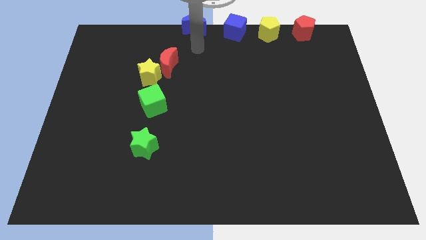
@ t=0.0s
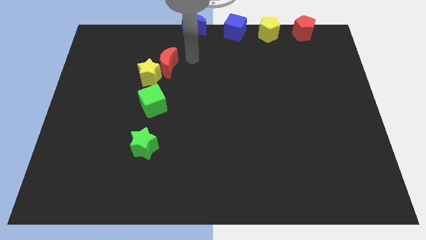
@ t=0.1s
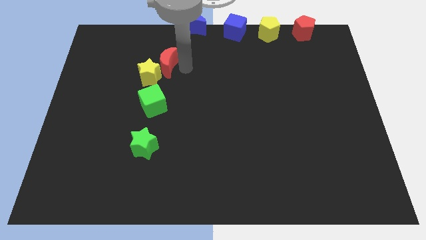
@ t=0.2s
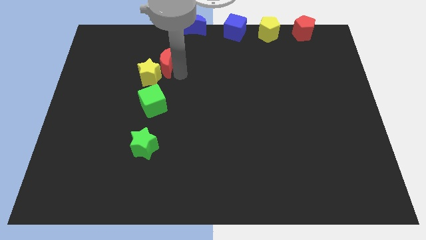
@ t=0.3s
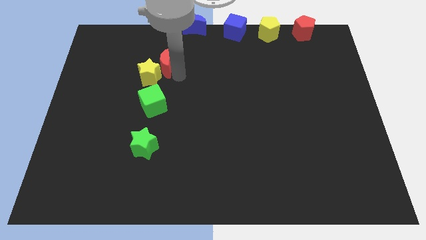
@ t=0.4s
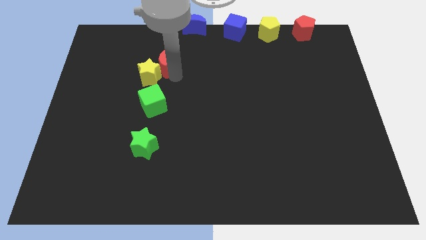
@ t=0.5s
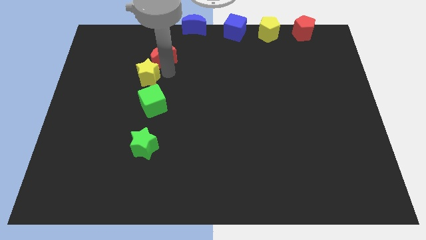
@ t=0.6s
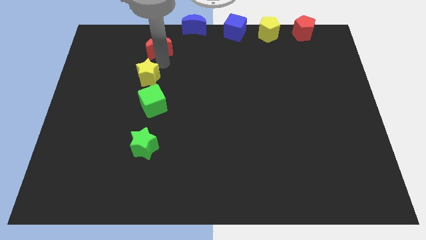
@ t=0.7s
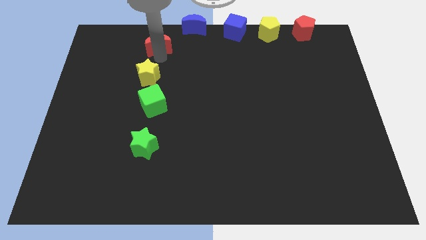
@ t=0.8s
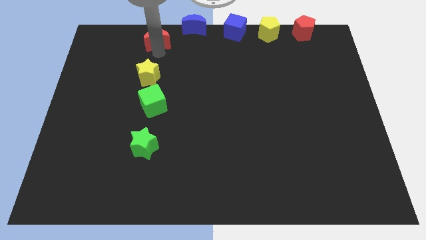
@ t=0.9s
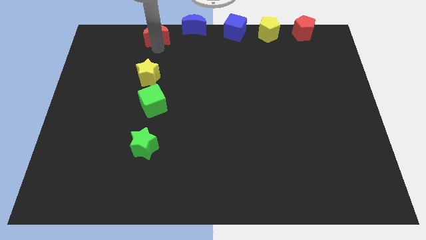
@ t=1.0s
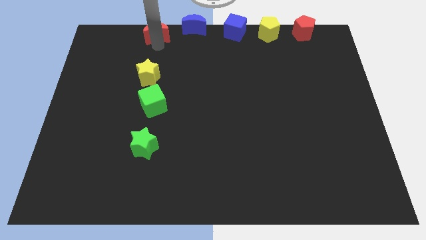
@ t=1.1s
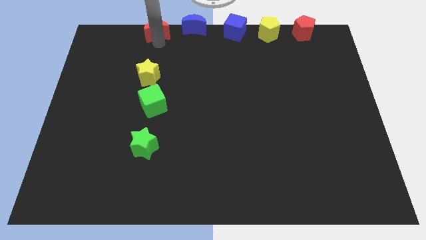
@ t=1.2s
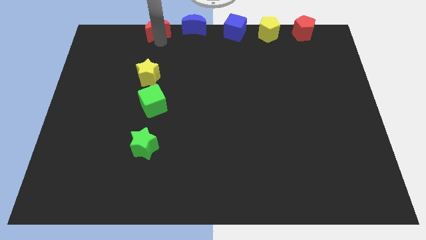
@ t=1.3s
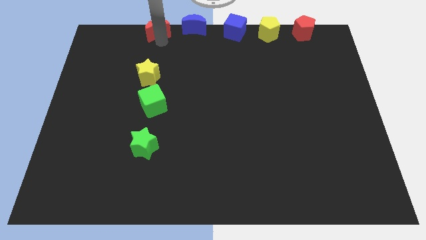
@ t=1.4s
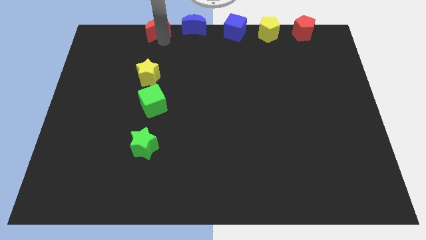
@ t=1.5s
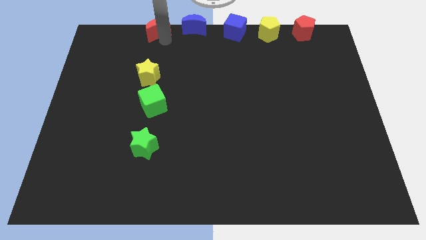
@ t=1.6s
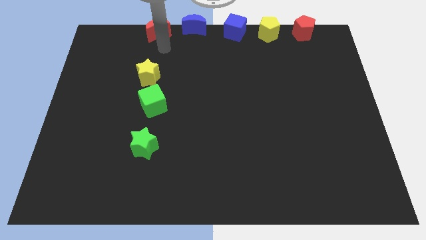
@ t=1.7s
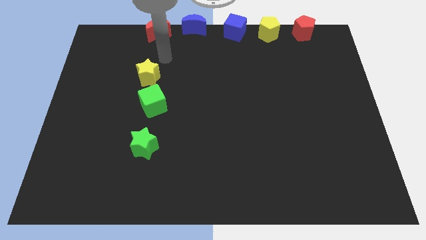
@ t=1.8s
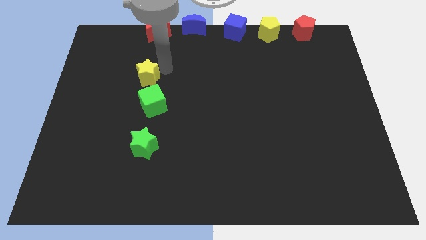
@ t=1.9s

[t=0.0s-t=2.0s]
move the red crescent to the left side of the blue crescent

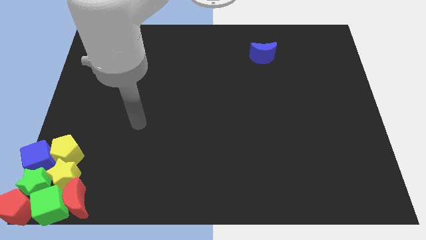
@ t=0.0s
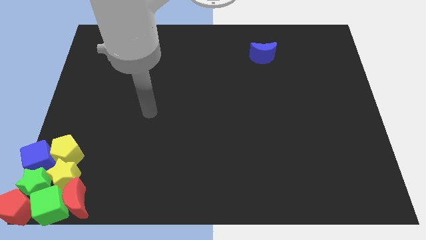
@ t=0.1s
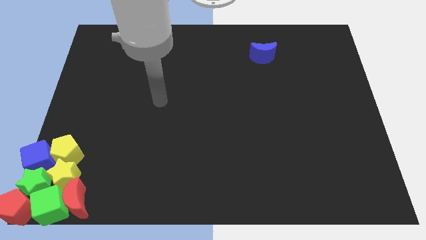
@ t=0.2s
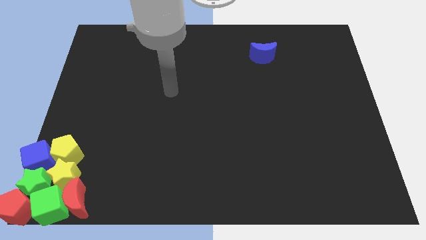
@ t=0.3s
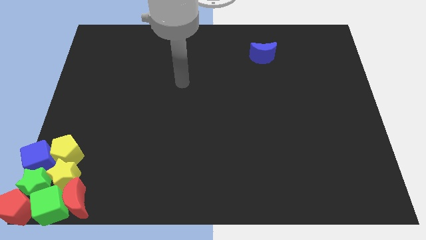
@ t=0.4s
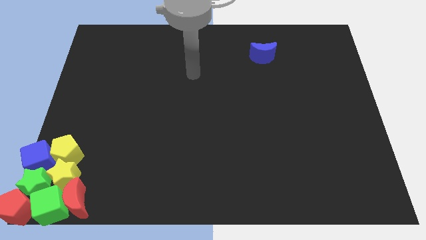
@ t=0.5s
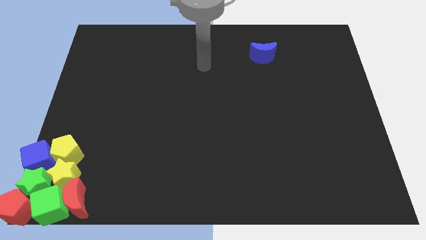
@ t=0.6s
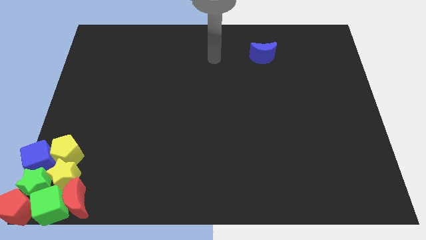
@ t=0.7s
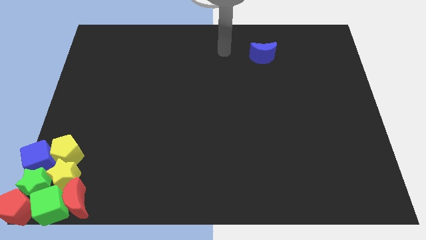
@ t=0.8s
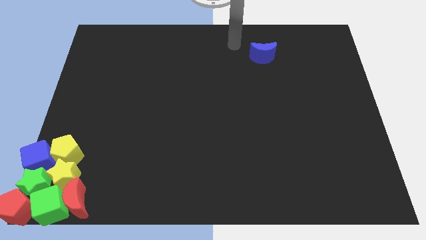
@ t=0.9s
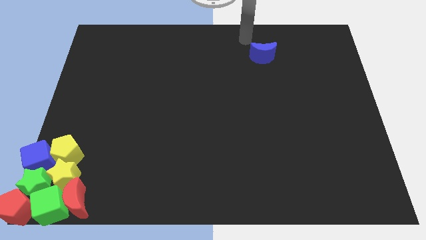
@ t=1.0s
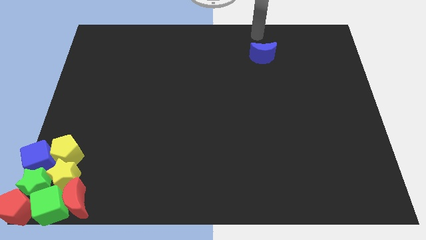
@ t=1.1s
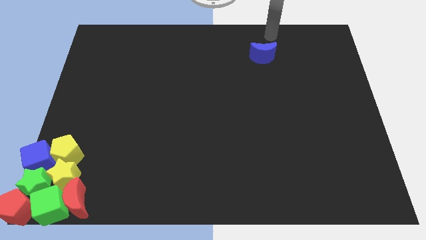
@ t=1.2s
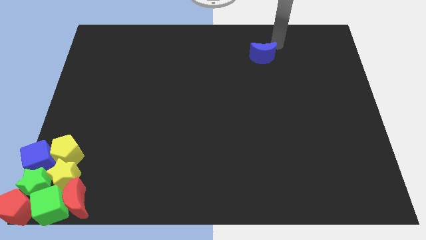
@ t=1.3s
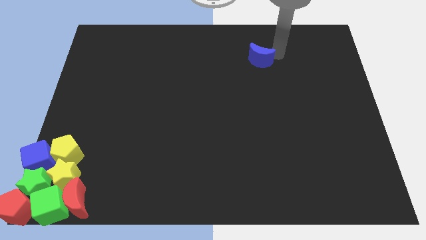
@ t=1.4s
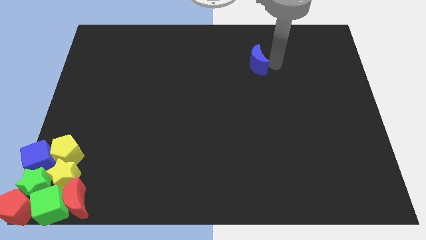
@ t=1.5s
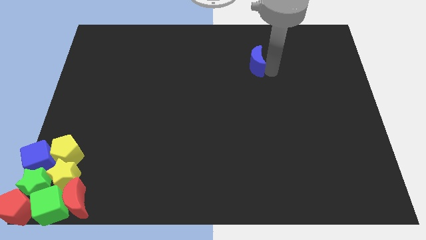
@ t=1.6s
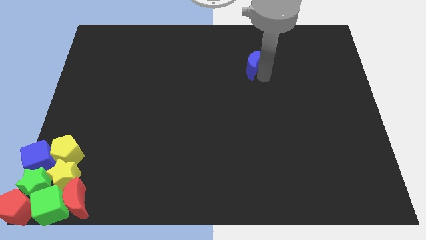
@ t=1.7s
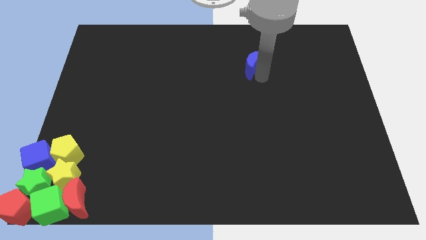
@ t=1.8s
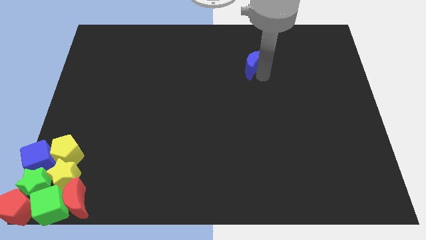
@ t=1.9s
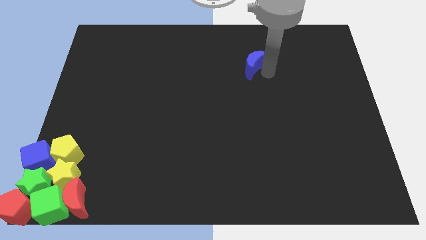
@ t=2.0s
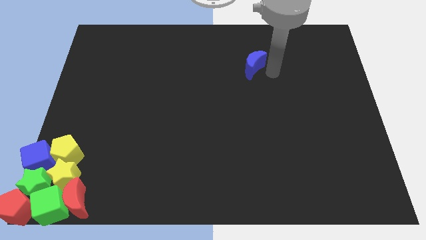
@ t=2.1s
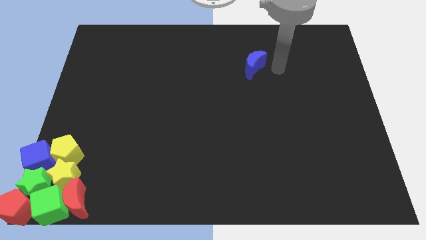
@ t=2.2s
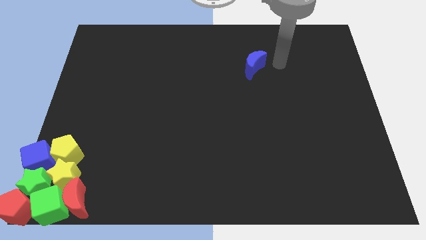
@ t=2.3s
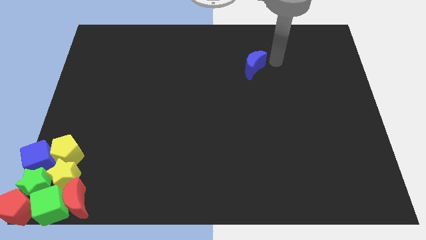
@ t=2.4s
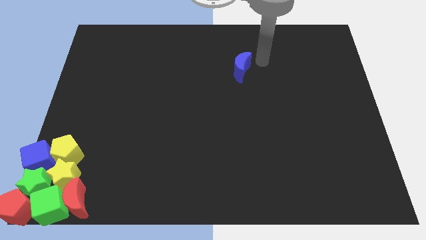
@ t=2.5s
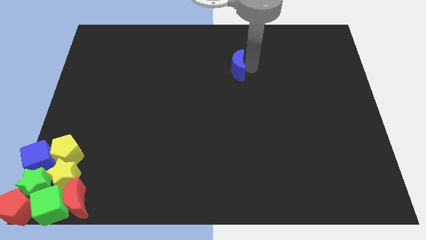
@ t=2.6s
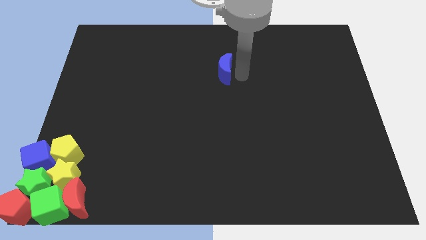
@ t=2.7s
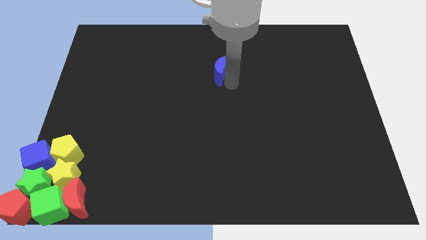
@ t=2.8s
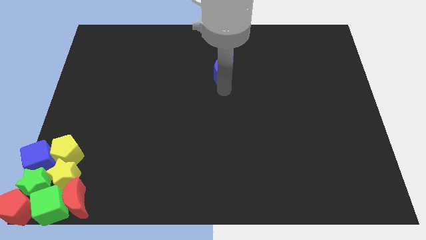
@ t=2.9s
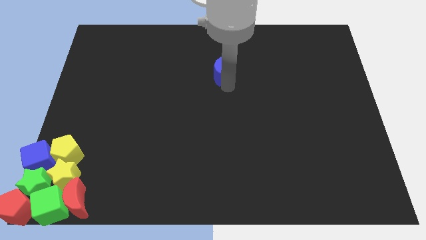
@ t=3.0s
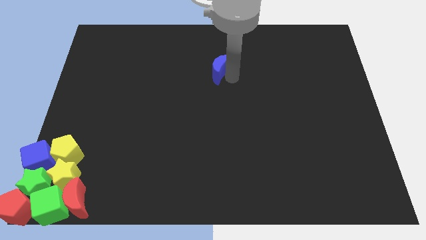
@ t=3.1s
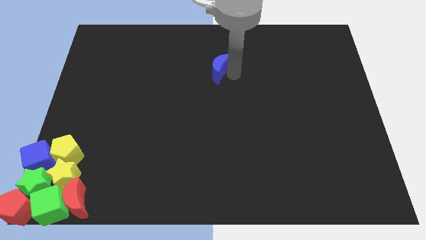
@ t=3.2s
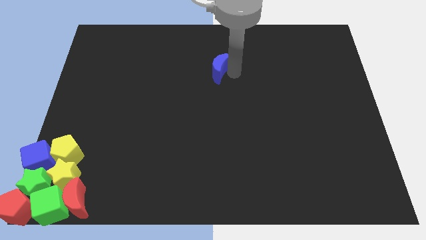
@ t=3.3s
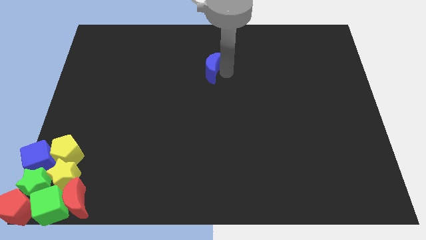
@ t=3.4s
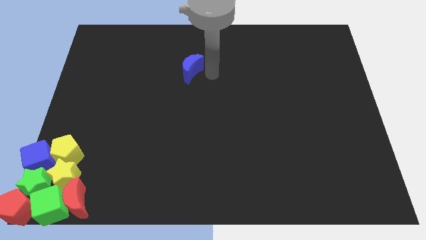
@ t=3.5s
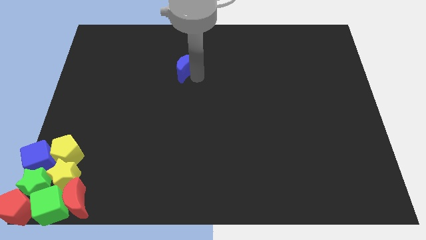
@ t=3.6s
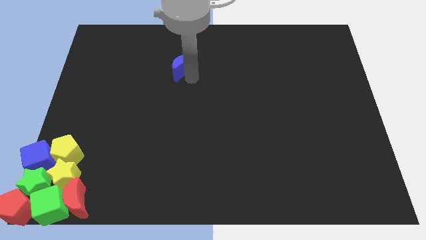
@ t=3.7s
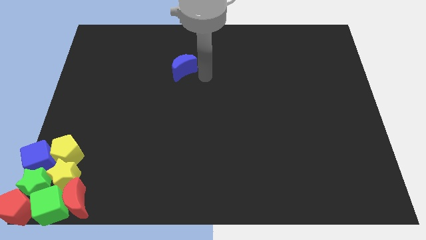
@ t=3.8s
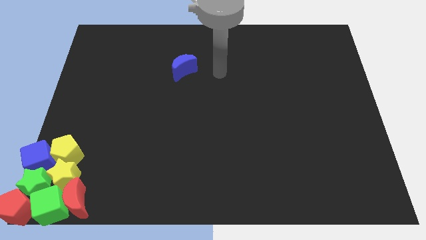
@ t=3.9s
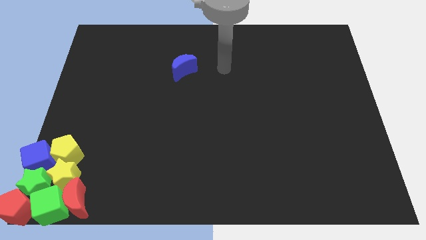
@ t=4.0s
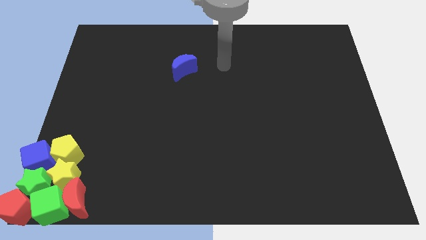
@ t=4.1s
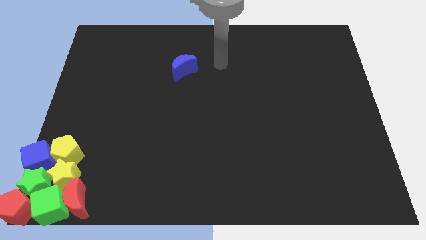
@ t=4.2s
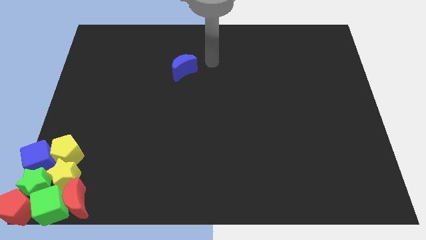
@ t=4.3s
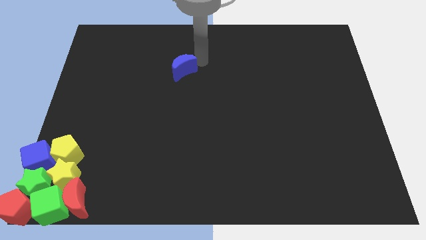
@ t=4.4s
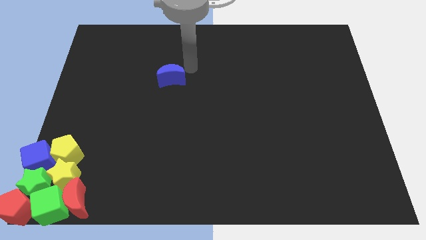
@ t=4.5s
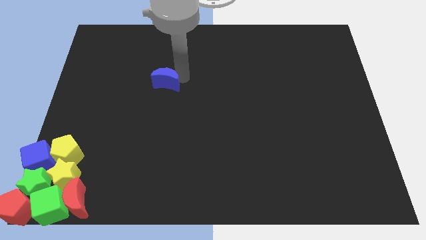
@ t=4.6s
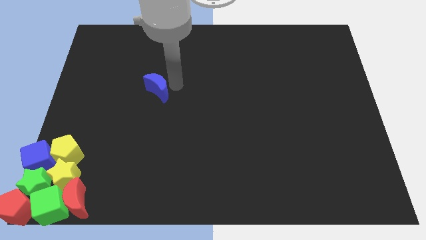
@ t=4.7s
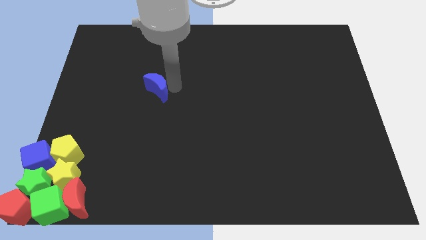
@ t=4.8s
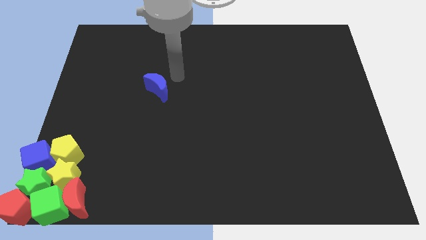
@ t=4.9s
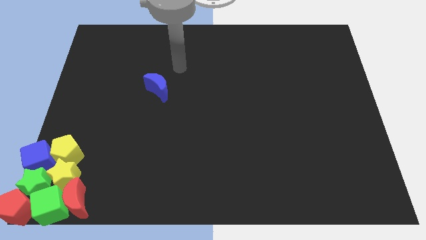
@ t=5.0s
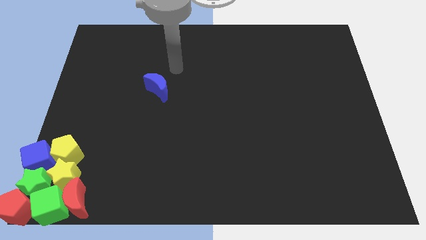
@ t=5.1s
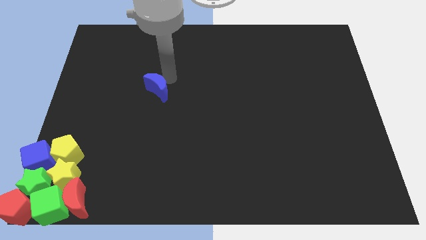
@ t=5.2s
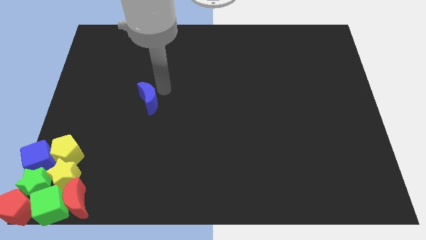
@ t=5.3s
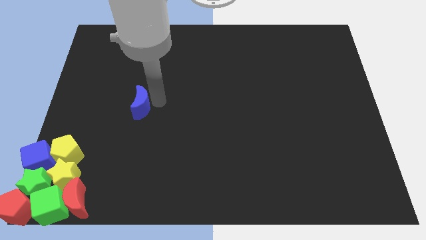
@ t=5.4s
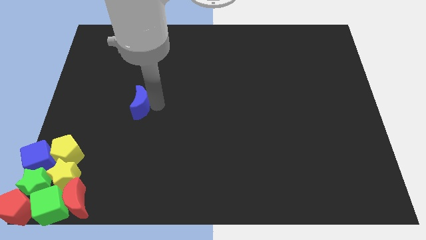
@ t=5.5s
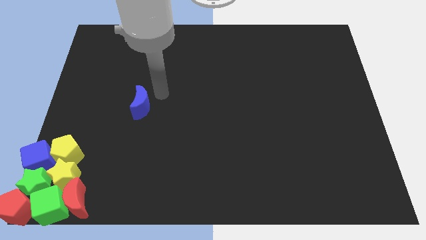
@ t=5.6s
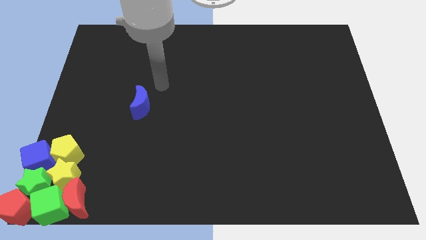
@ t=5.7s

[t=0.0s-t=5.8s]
push the blue crescent to the bottom left of the board

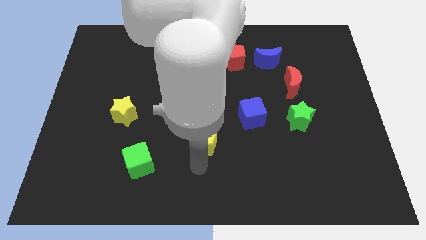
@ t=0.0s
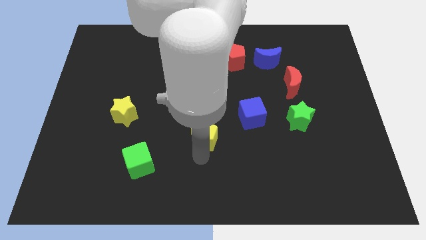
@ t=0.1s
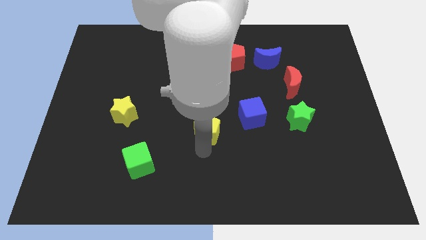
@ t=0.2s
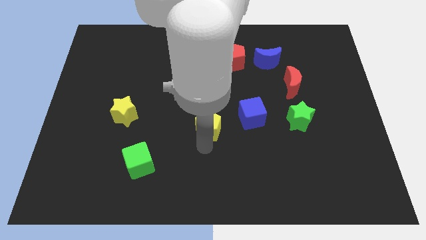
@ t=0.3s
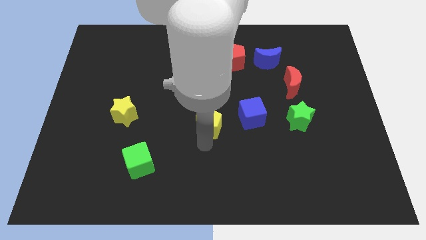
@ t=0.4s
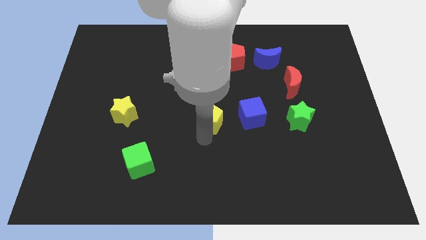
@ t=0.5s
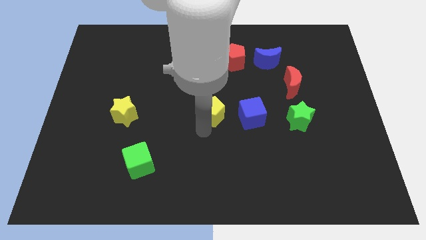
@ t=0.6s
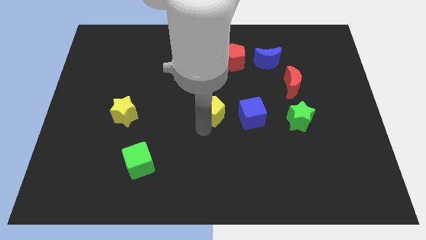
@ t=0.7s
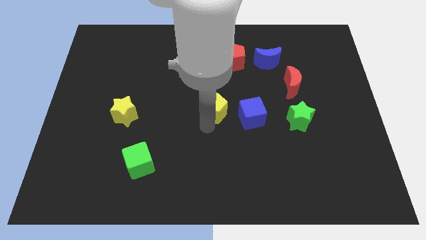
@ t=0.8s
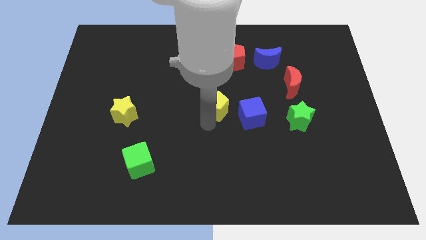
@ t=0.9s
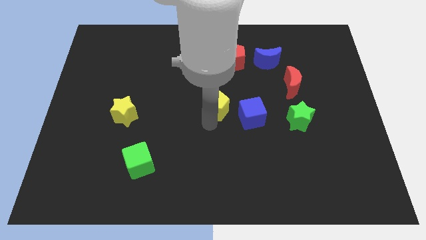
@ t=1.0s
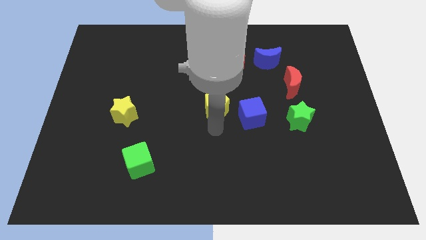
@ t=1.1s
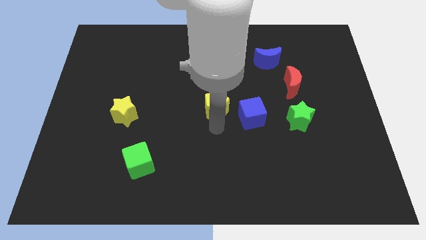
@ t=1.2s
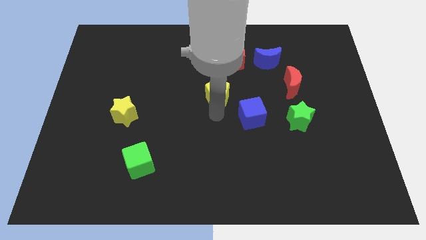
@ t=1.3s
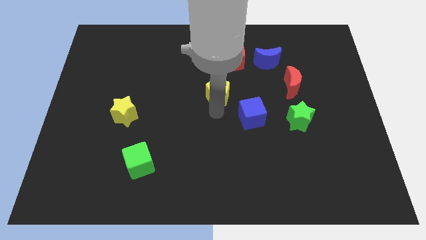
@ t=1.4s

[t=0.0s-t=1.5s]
move yellow pentagon left above the blue cube
